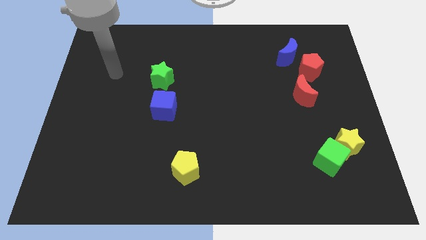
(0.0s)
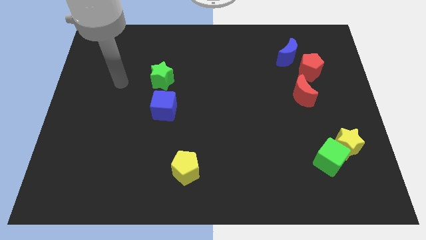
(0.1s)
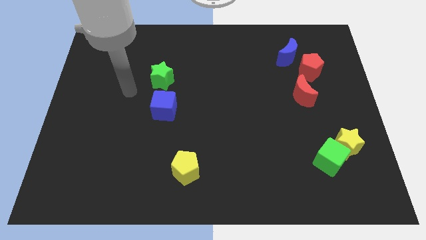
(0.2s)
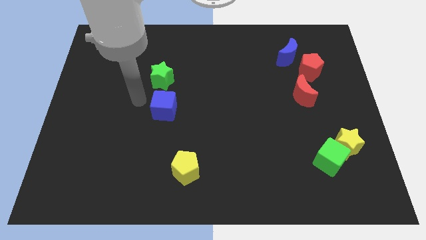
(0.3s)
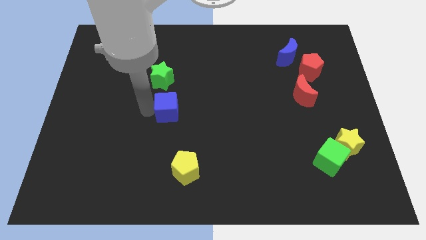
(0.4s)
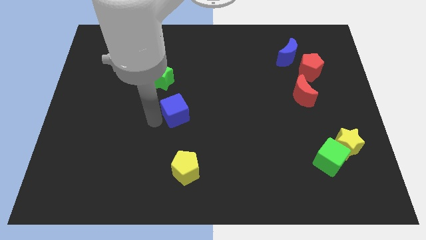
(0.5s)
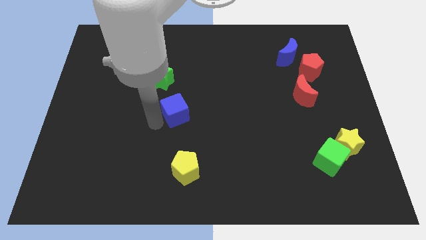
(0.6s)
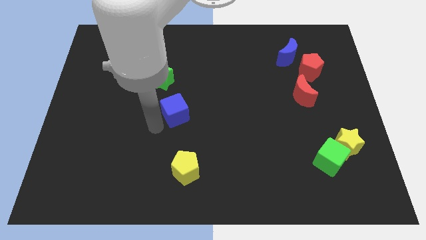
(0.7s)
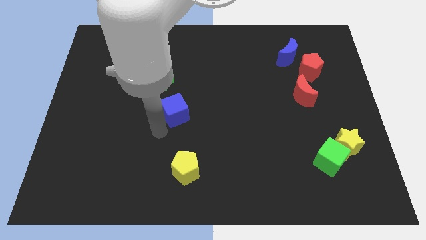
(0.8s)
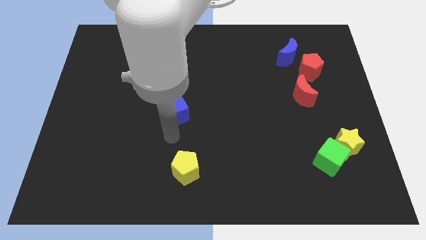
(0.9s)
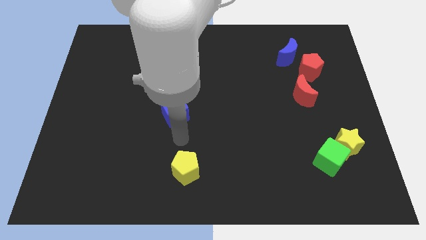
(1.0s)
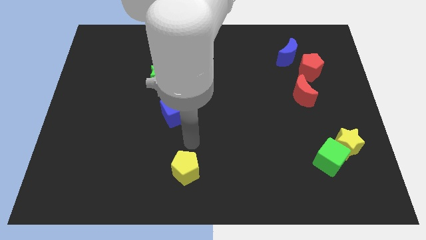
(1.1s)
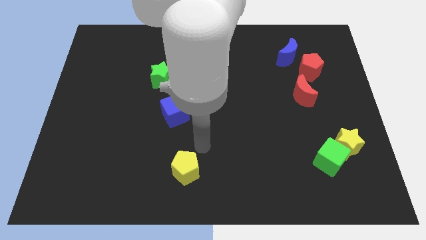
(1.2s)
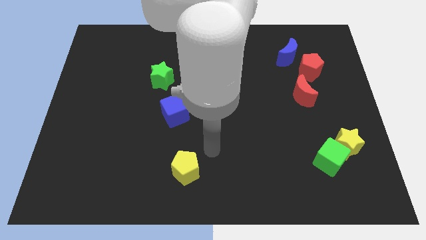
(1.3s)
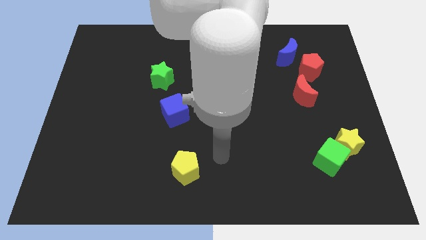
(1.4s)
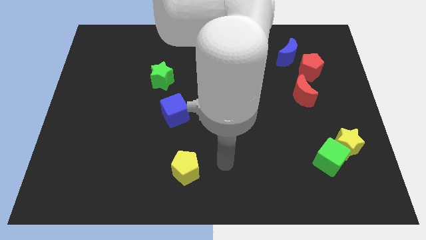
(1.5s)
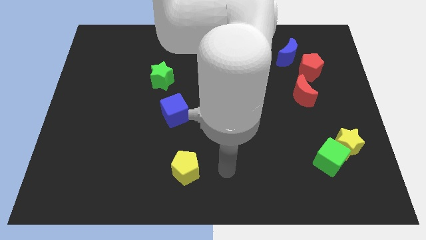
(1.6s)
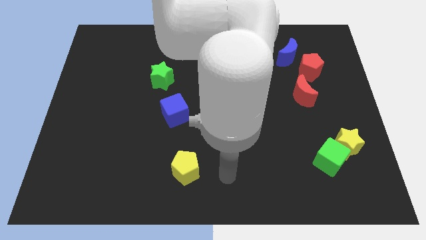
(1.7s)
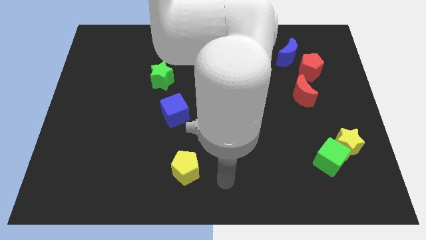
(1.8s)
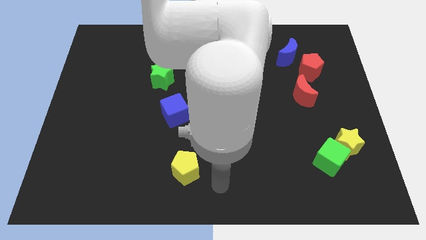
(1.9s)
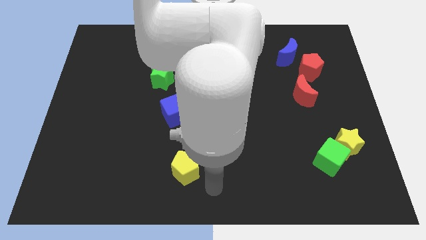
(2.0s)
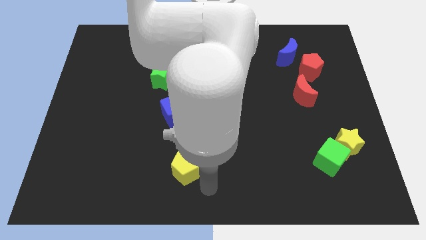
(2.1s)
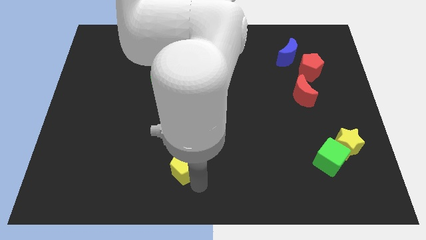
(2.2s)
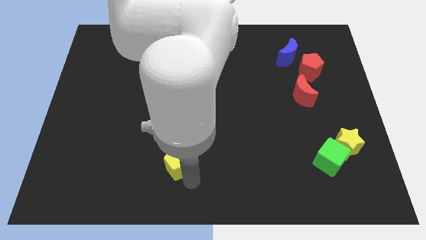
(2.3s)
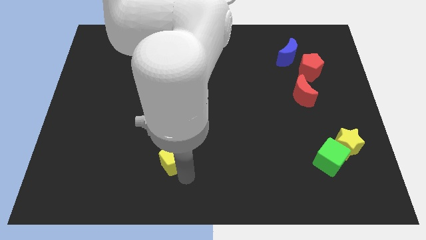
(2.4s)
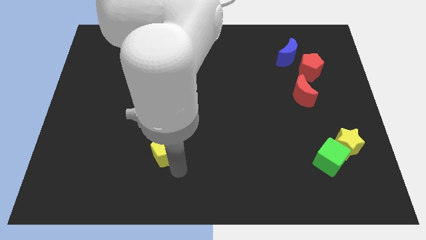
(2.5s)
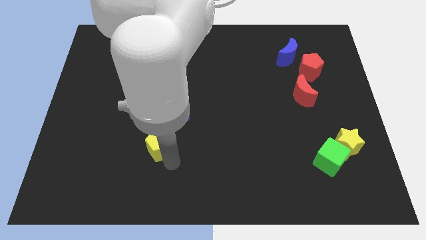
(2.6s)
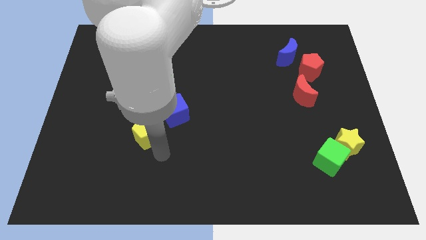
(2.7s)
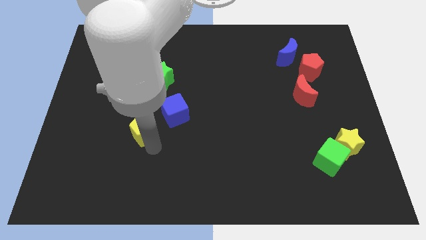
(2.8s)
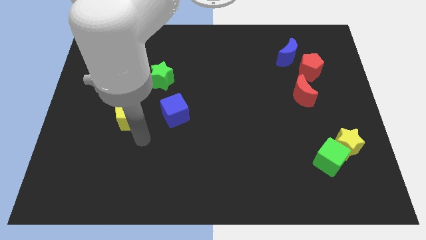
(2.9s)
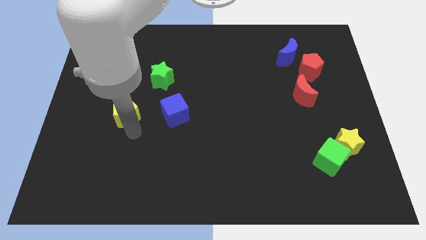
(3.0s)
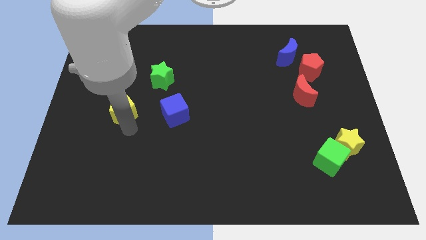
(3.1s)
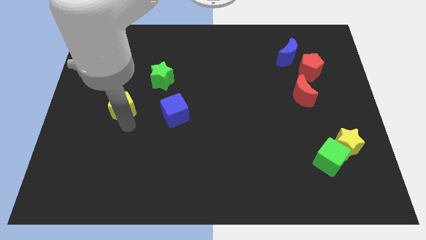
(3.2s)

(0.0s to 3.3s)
push the yellow pentagon to the left of the blue cube

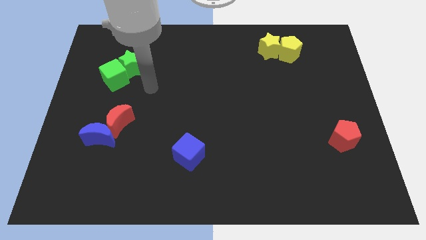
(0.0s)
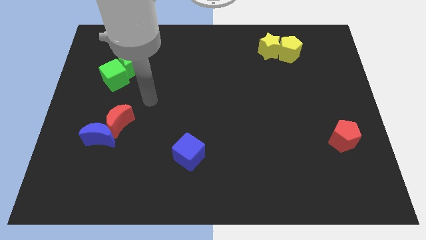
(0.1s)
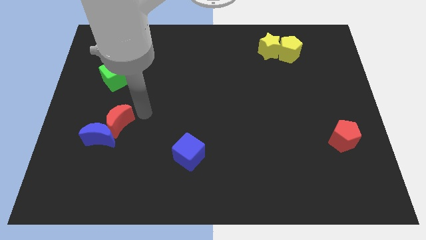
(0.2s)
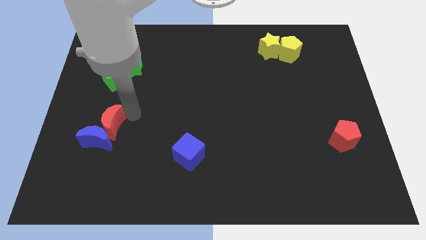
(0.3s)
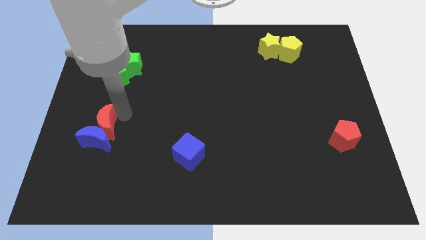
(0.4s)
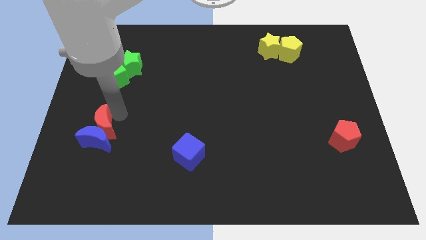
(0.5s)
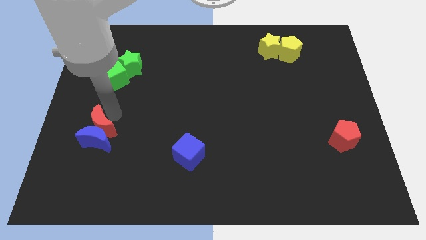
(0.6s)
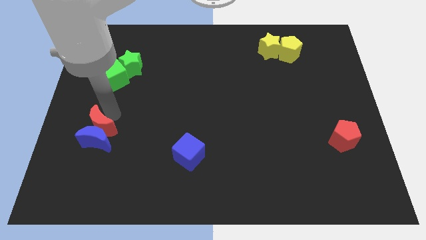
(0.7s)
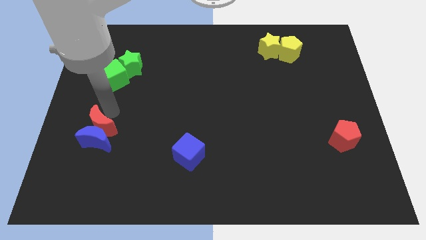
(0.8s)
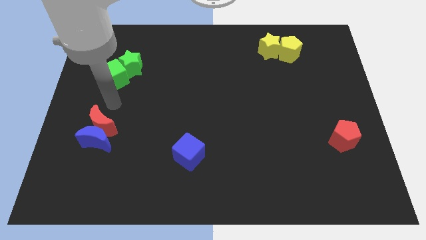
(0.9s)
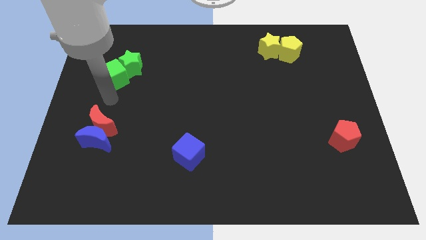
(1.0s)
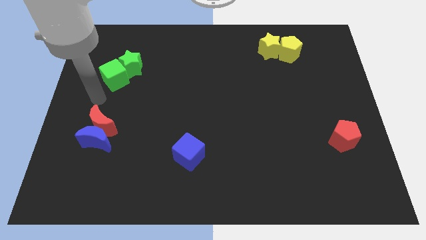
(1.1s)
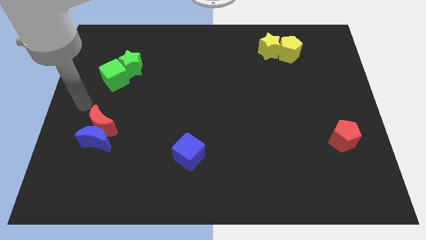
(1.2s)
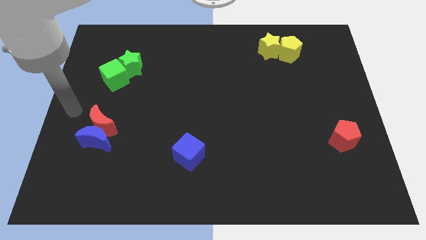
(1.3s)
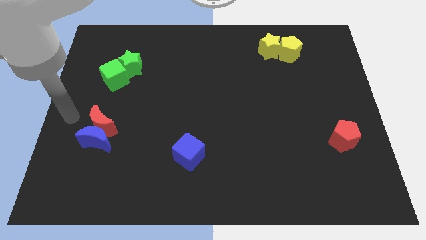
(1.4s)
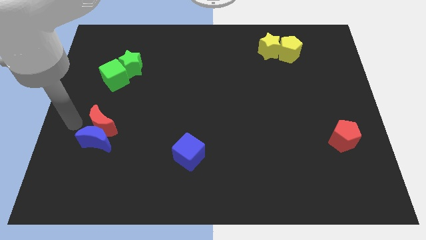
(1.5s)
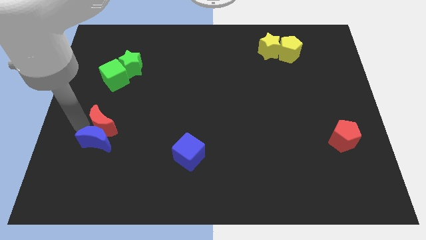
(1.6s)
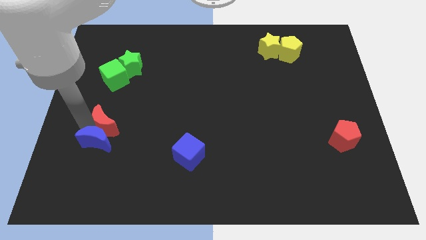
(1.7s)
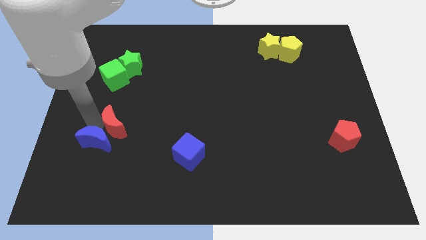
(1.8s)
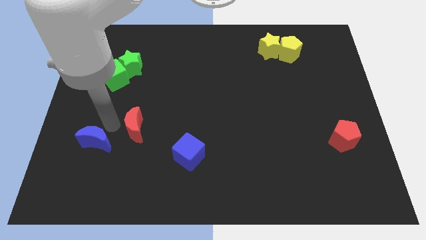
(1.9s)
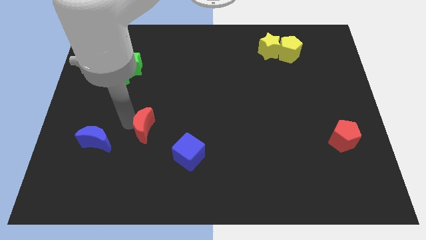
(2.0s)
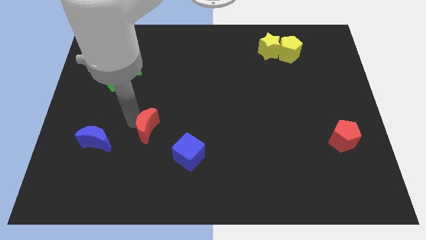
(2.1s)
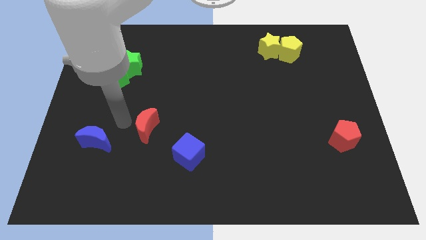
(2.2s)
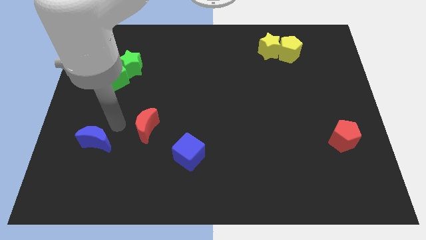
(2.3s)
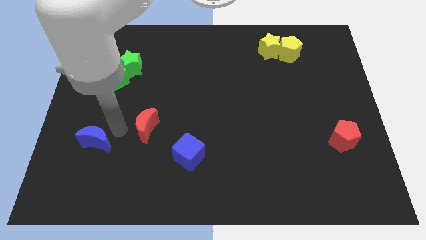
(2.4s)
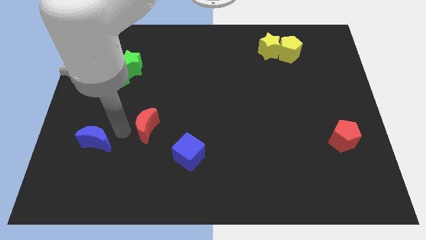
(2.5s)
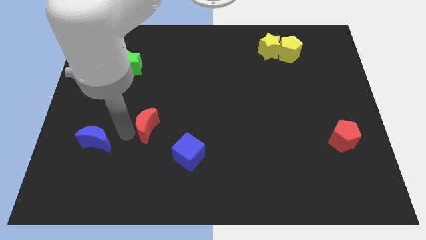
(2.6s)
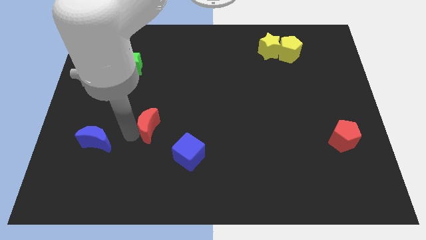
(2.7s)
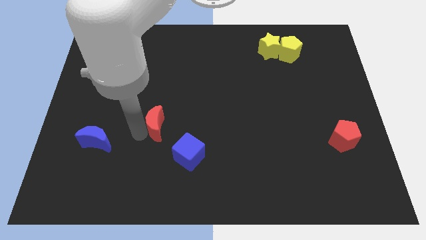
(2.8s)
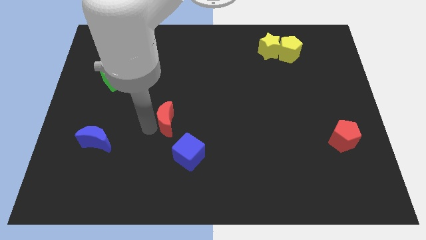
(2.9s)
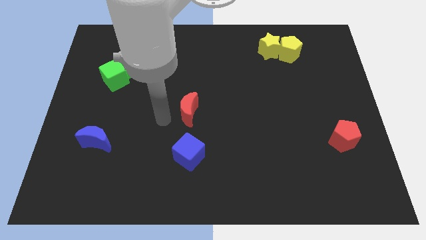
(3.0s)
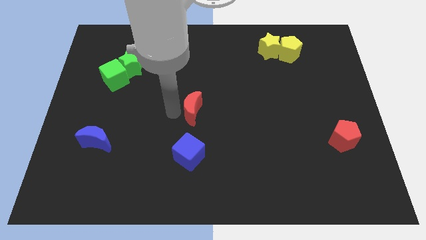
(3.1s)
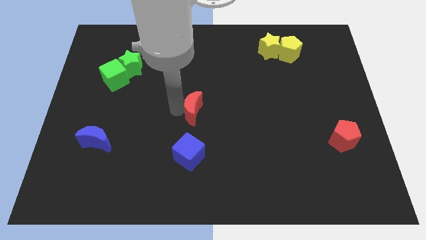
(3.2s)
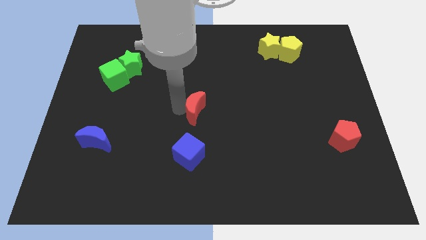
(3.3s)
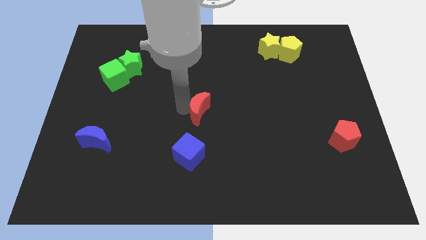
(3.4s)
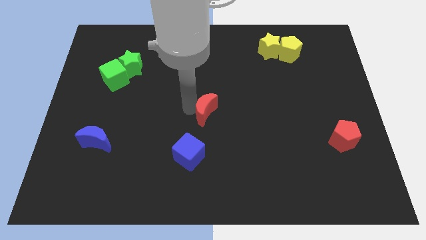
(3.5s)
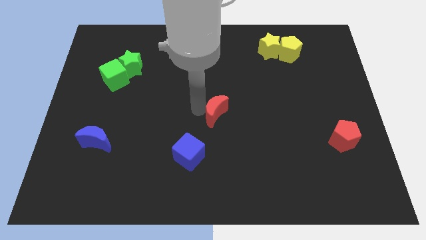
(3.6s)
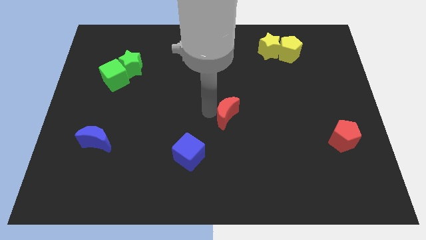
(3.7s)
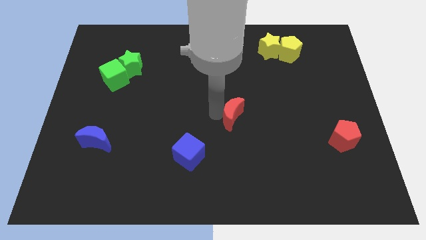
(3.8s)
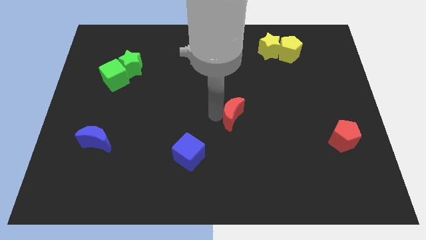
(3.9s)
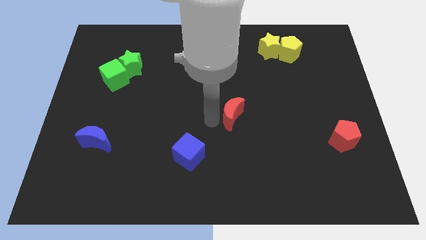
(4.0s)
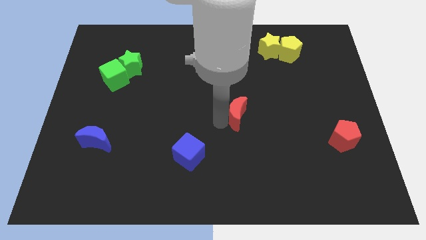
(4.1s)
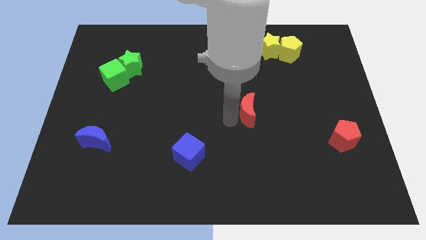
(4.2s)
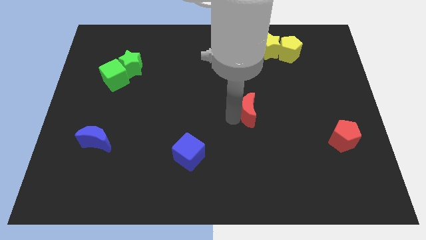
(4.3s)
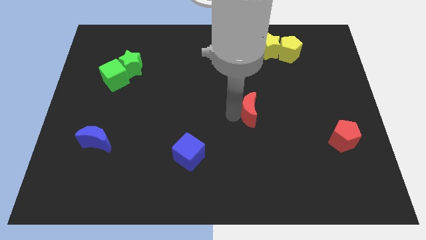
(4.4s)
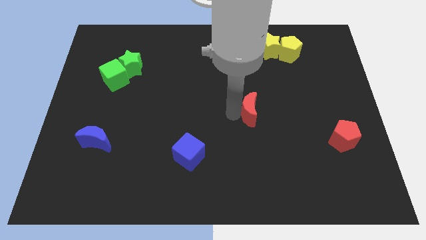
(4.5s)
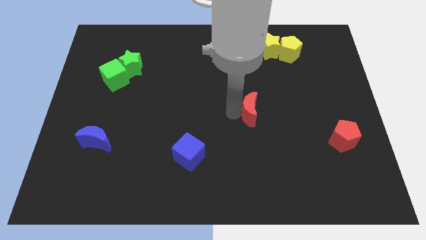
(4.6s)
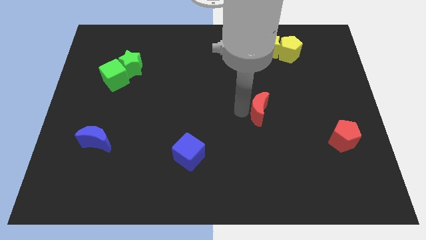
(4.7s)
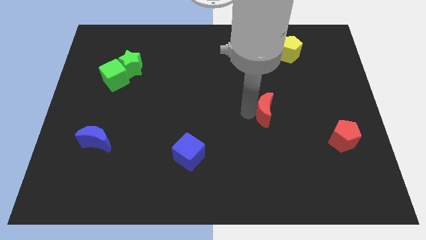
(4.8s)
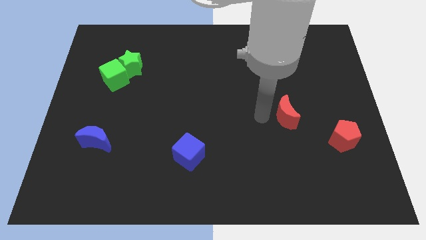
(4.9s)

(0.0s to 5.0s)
put the red moon diagonally above the top left side of the red pentagon

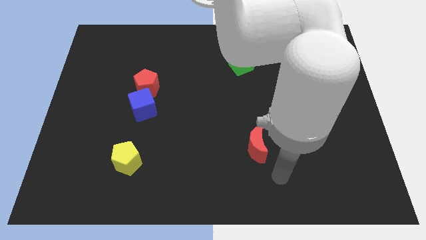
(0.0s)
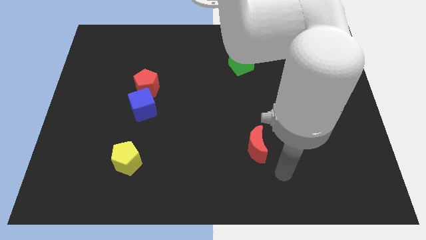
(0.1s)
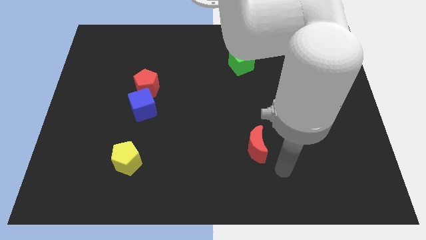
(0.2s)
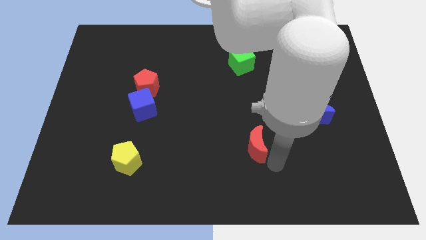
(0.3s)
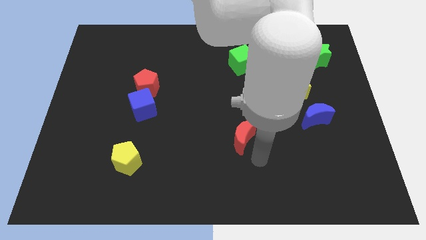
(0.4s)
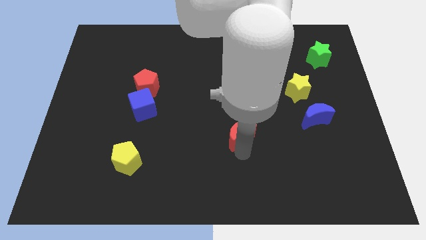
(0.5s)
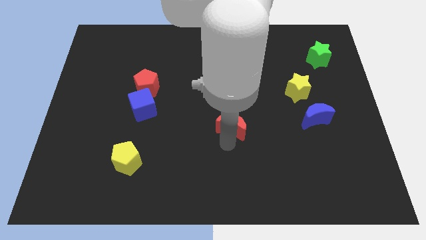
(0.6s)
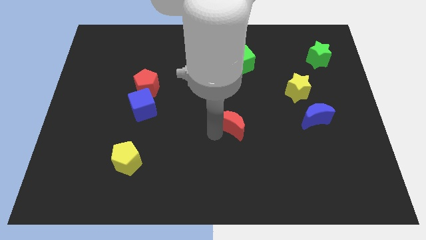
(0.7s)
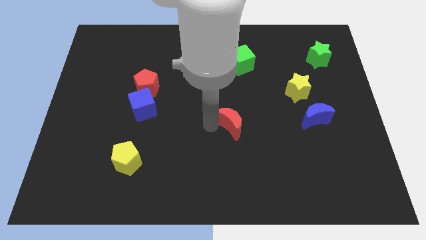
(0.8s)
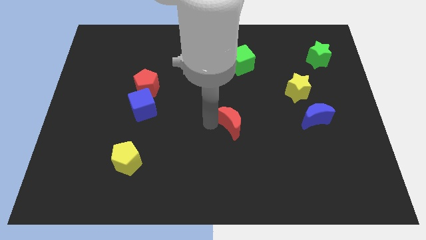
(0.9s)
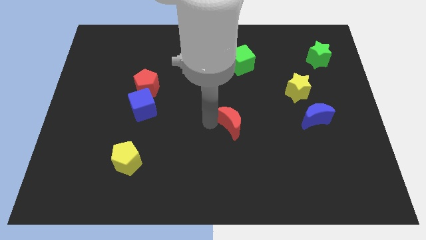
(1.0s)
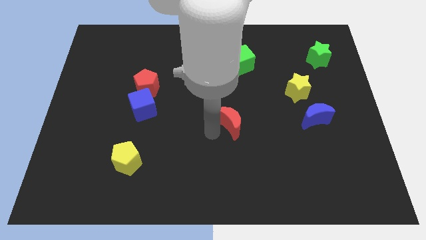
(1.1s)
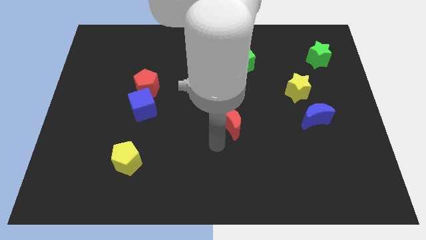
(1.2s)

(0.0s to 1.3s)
place the red moon to the left of the blue moon
